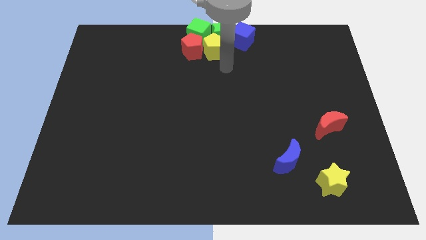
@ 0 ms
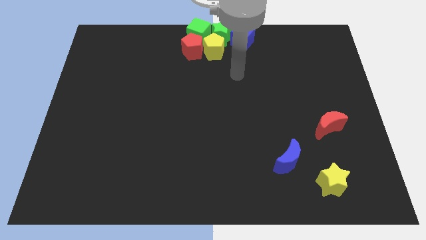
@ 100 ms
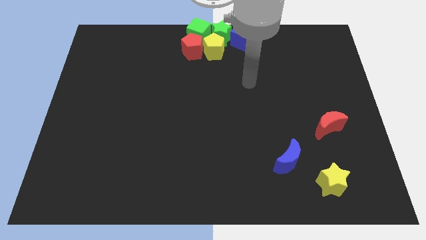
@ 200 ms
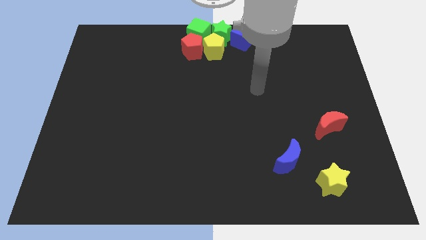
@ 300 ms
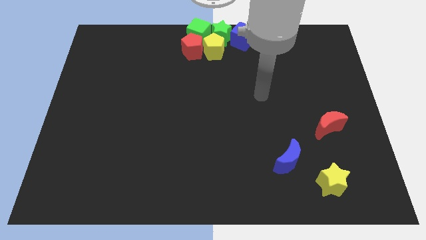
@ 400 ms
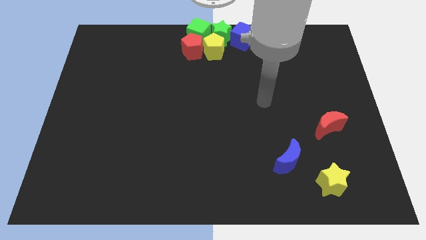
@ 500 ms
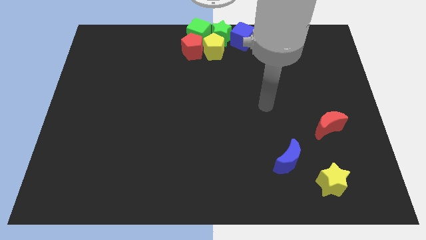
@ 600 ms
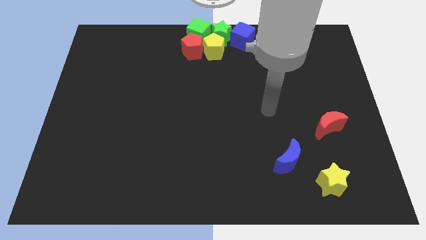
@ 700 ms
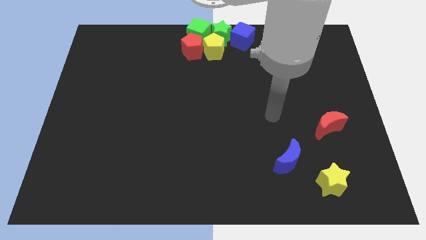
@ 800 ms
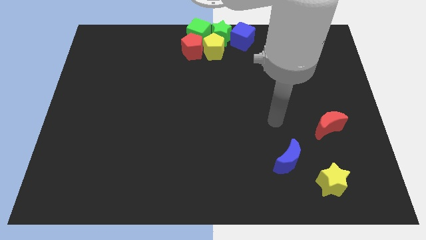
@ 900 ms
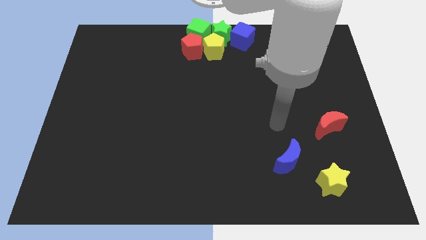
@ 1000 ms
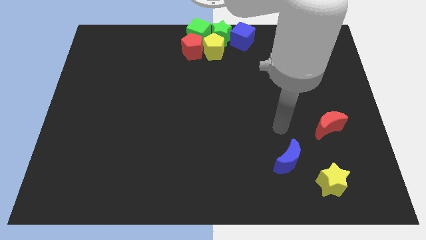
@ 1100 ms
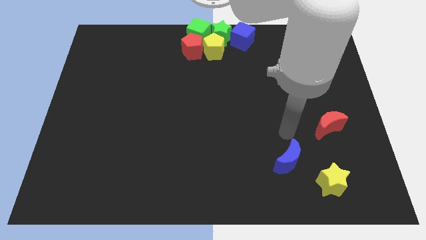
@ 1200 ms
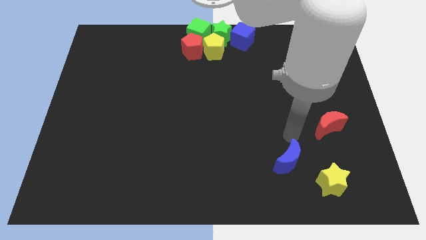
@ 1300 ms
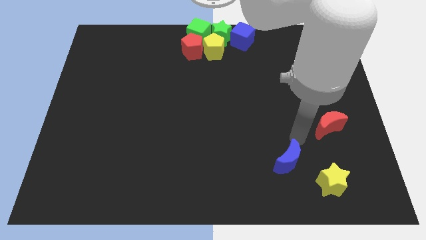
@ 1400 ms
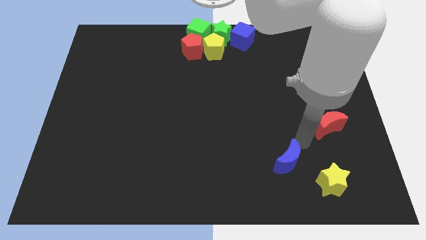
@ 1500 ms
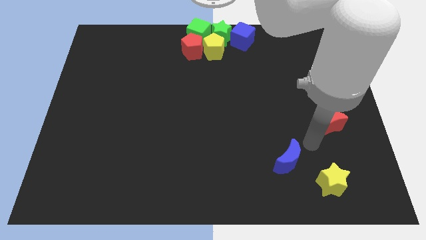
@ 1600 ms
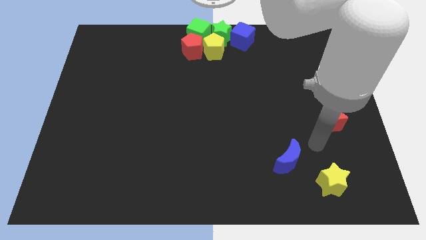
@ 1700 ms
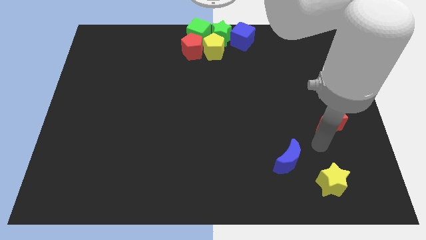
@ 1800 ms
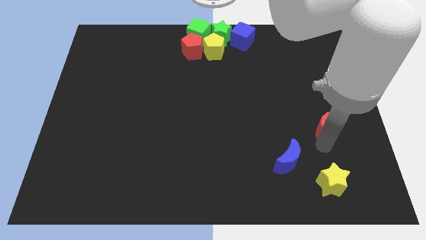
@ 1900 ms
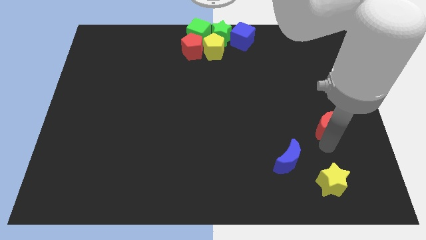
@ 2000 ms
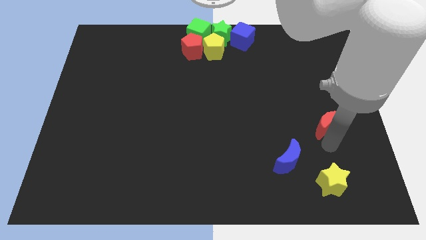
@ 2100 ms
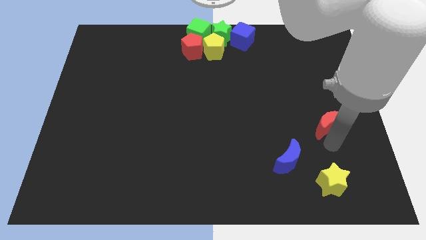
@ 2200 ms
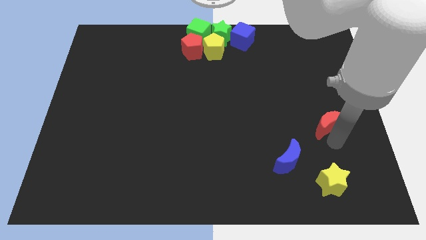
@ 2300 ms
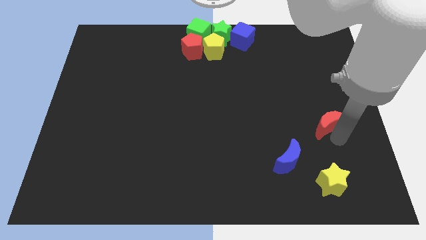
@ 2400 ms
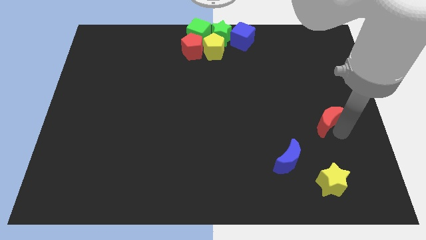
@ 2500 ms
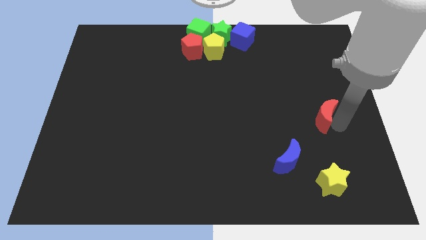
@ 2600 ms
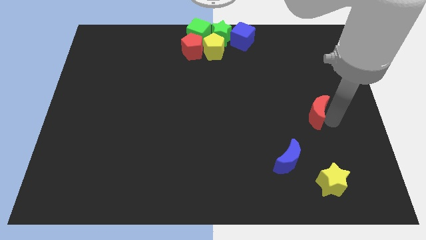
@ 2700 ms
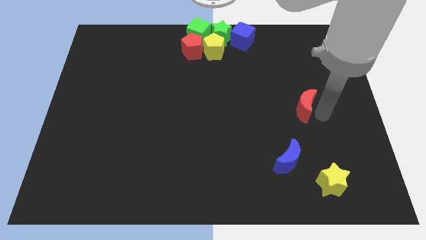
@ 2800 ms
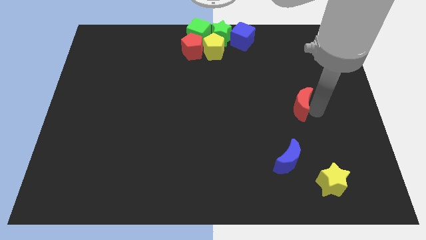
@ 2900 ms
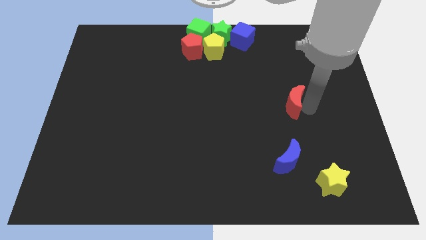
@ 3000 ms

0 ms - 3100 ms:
move the red crescent parallel to blue crescent

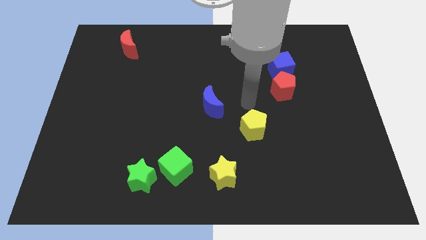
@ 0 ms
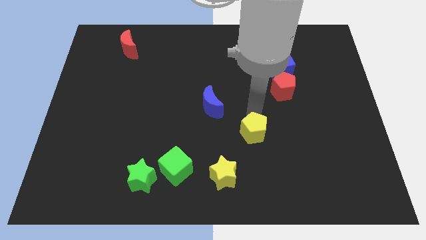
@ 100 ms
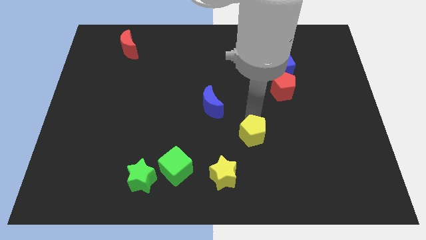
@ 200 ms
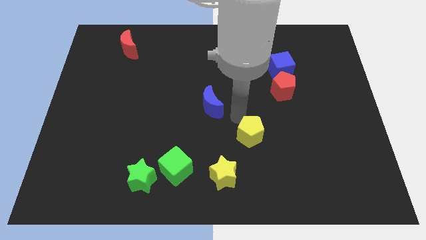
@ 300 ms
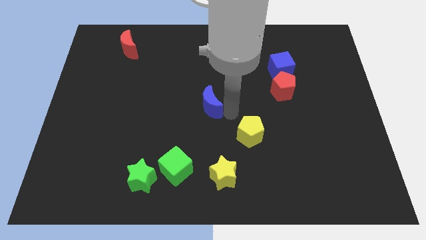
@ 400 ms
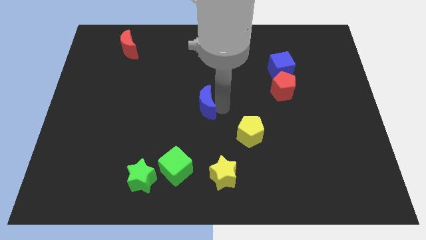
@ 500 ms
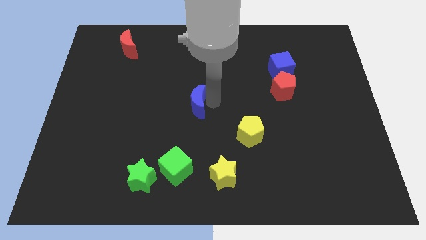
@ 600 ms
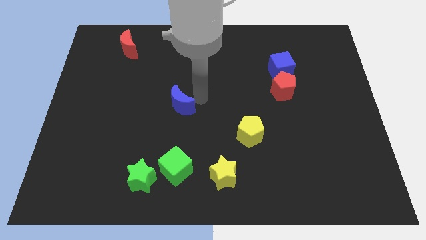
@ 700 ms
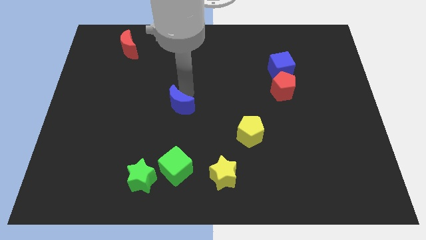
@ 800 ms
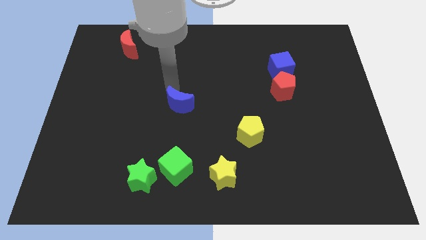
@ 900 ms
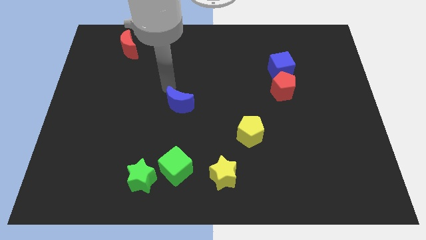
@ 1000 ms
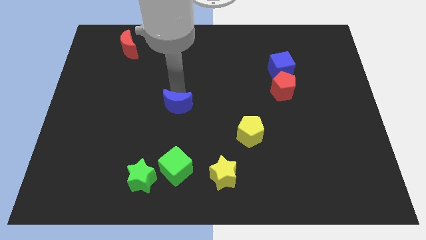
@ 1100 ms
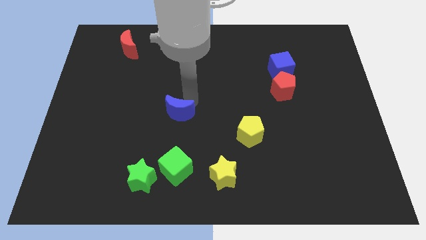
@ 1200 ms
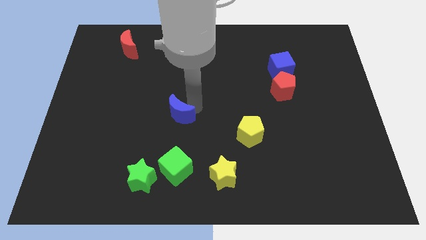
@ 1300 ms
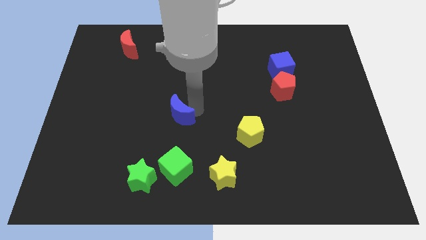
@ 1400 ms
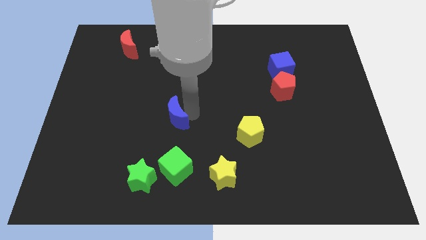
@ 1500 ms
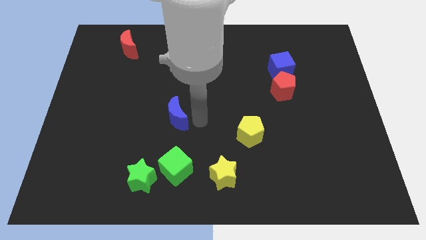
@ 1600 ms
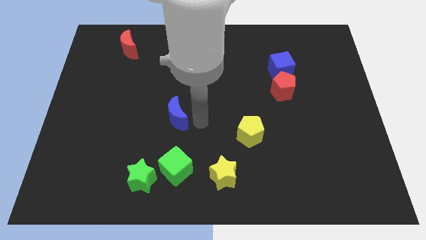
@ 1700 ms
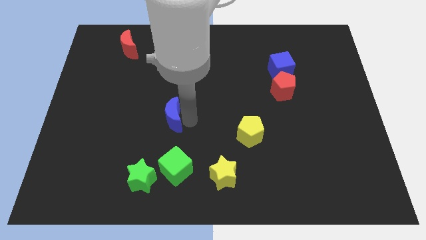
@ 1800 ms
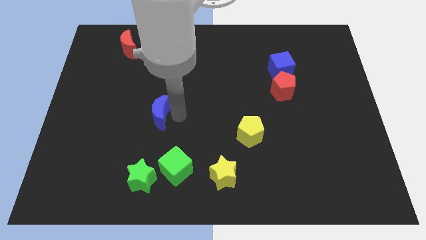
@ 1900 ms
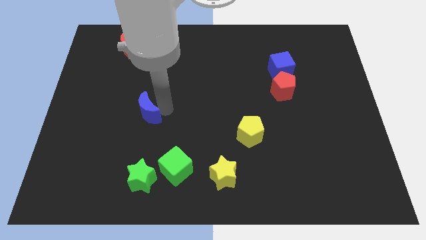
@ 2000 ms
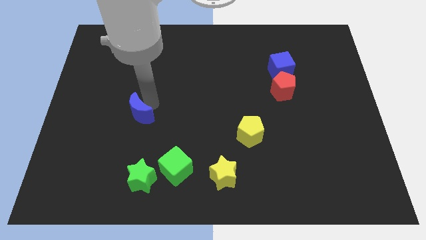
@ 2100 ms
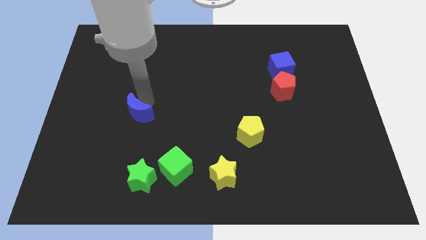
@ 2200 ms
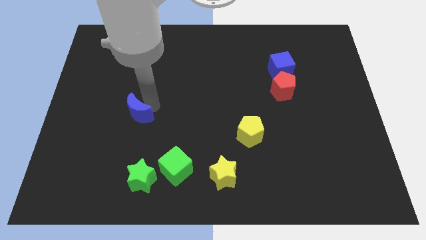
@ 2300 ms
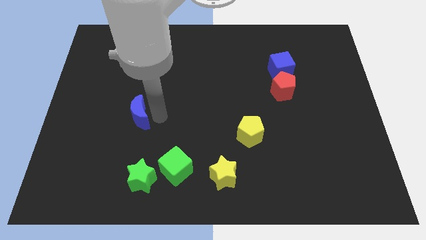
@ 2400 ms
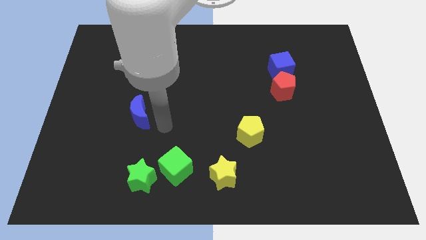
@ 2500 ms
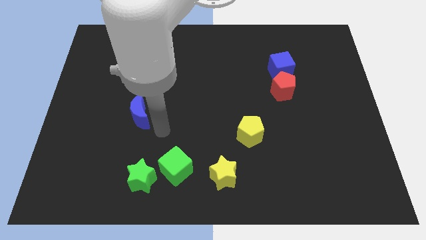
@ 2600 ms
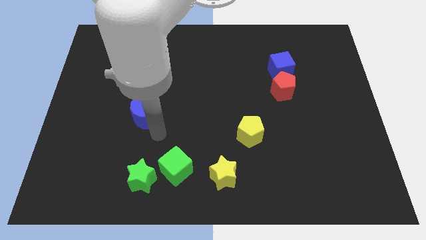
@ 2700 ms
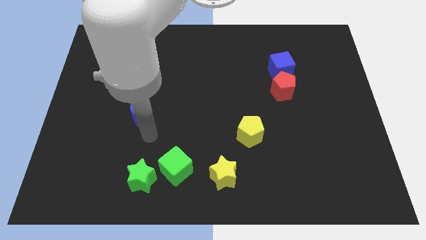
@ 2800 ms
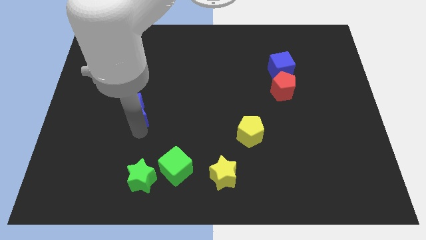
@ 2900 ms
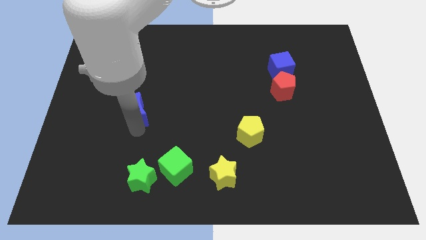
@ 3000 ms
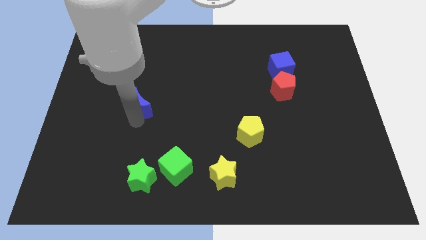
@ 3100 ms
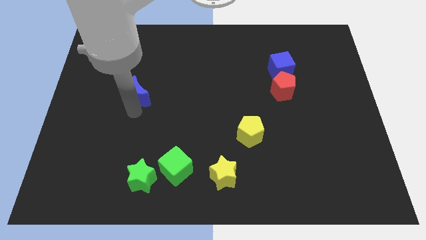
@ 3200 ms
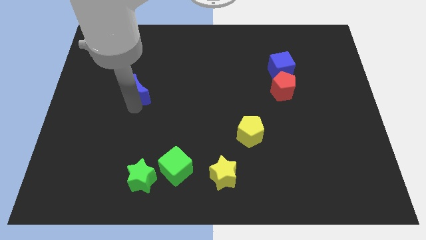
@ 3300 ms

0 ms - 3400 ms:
push the blue moon to the left side of the table

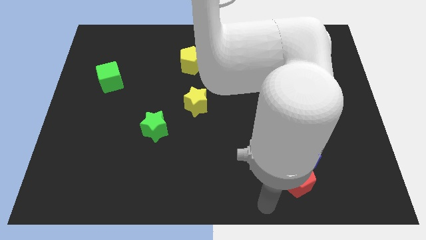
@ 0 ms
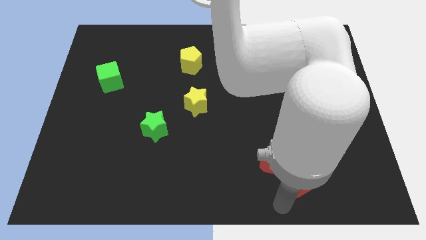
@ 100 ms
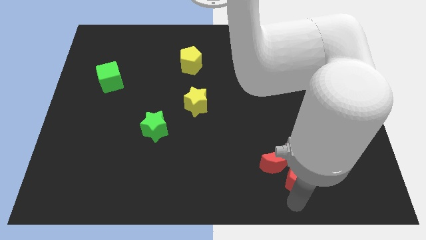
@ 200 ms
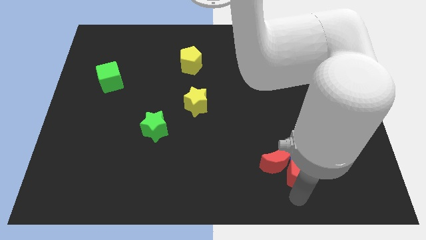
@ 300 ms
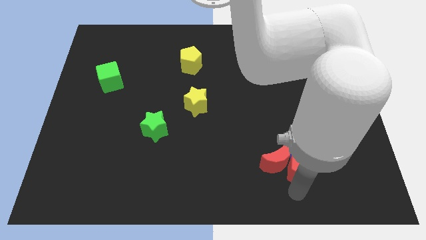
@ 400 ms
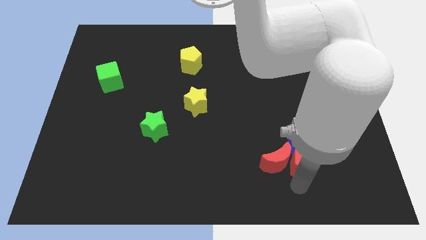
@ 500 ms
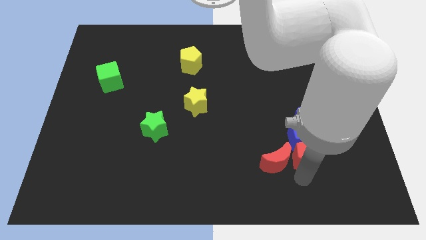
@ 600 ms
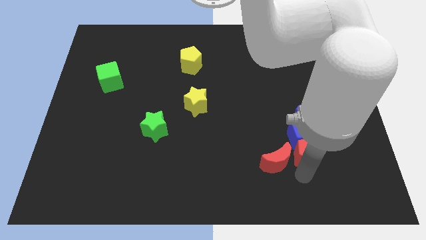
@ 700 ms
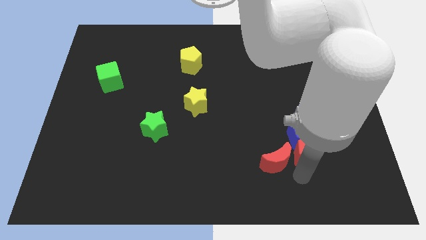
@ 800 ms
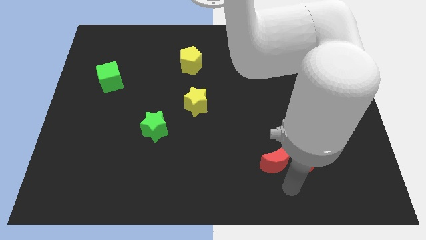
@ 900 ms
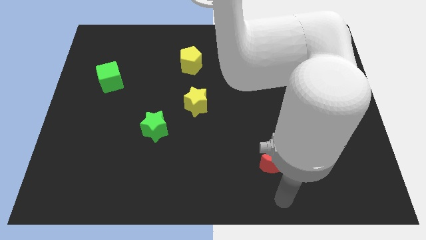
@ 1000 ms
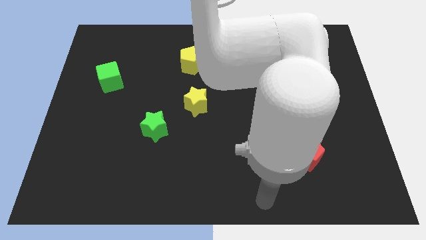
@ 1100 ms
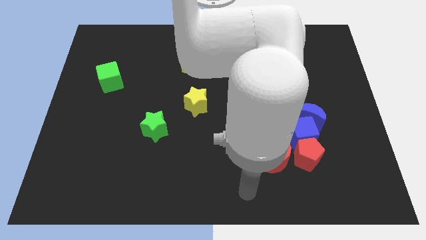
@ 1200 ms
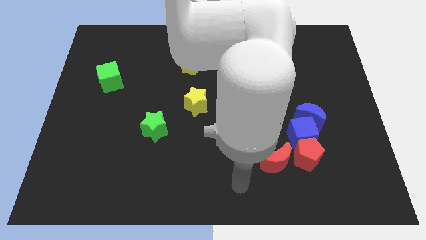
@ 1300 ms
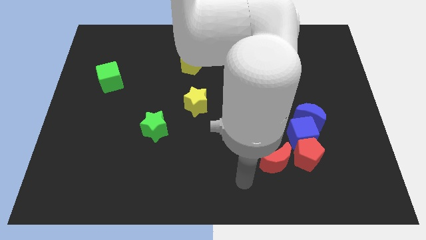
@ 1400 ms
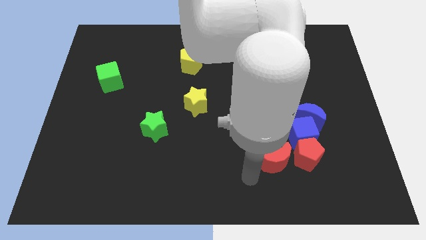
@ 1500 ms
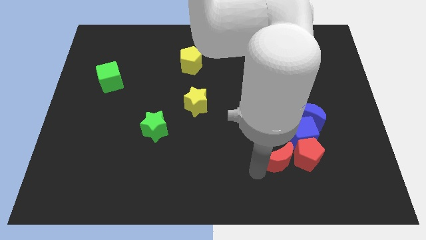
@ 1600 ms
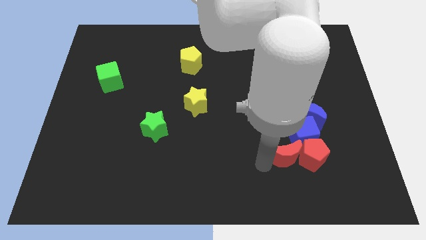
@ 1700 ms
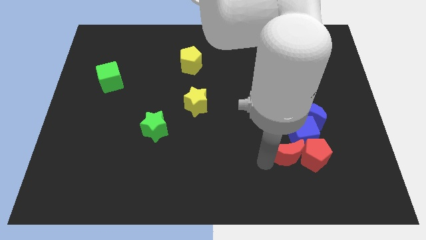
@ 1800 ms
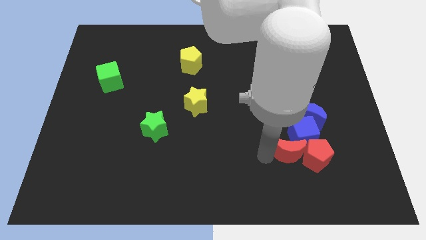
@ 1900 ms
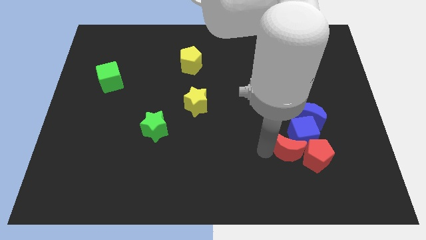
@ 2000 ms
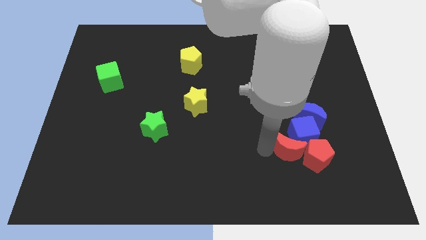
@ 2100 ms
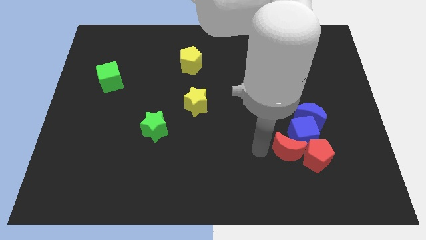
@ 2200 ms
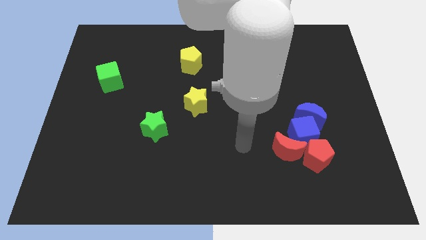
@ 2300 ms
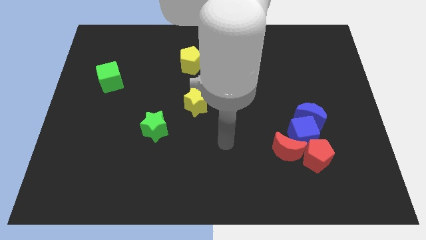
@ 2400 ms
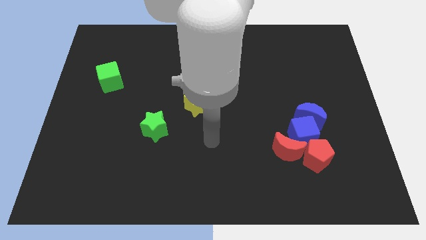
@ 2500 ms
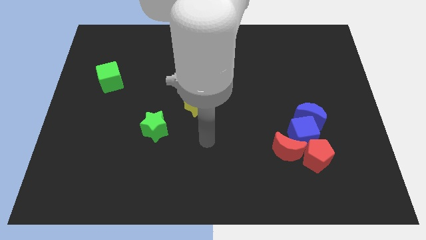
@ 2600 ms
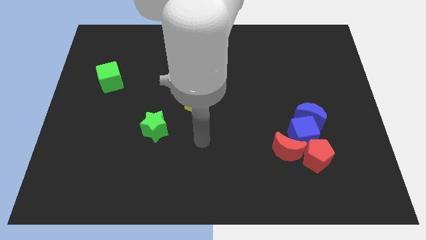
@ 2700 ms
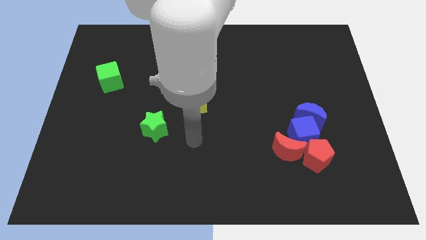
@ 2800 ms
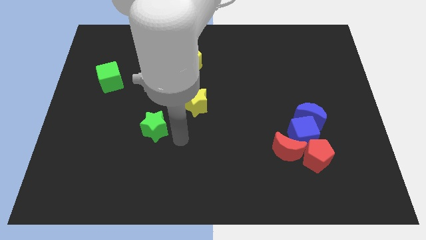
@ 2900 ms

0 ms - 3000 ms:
move the red blocks into the blue cube
